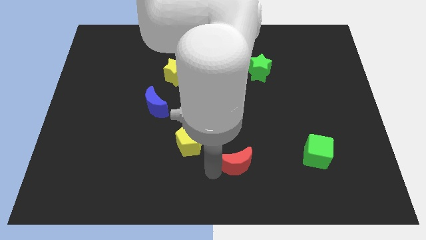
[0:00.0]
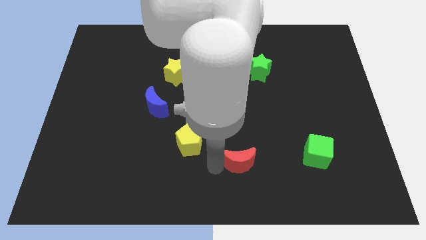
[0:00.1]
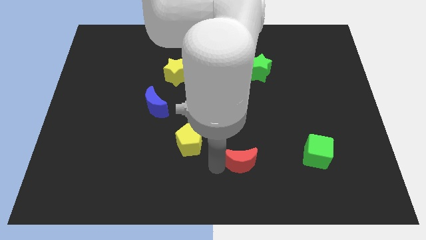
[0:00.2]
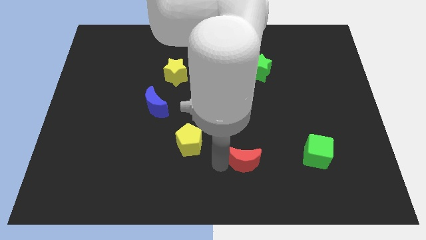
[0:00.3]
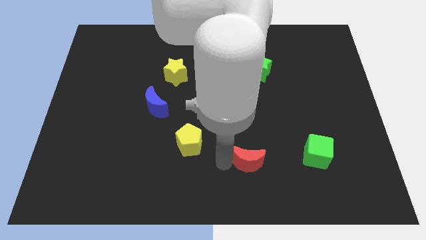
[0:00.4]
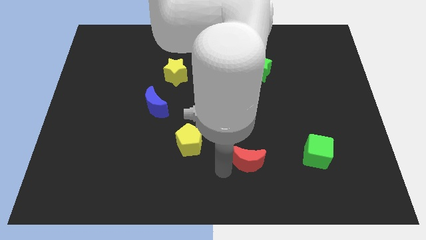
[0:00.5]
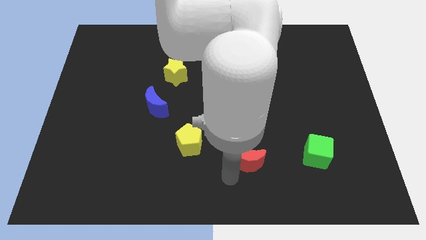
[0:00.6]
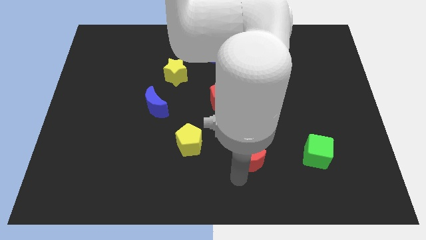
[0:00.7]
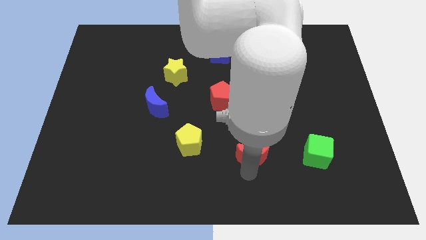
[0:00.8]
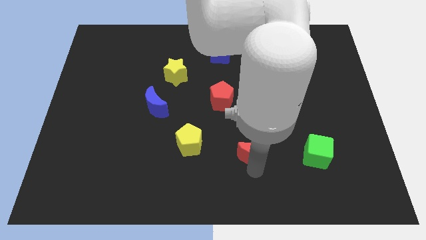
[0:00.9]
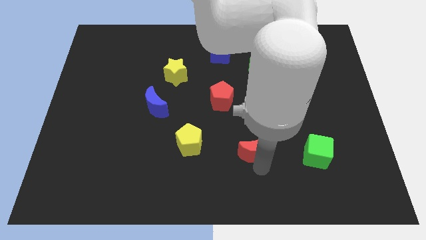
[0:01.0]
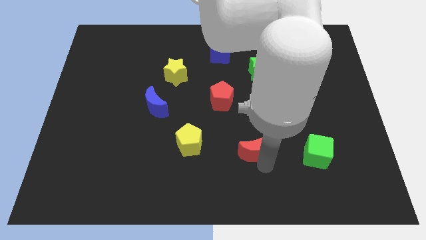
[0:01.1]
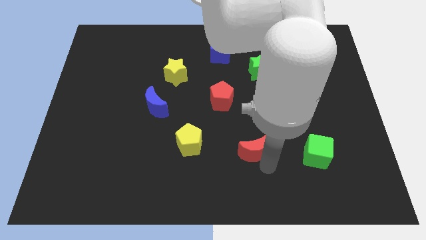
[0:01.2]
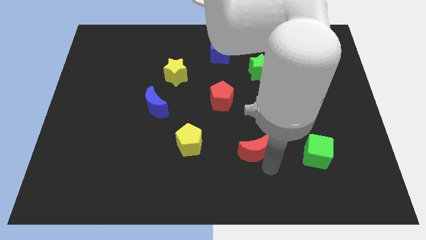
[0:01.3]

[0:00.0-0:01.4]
place red crescent to the left of green cube

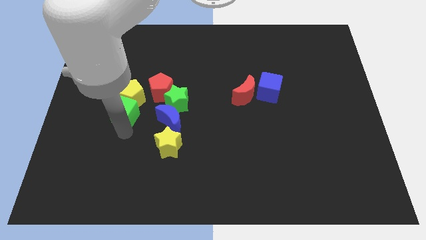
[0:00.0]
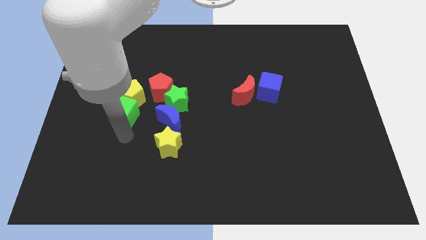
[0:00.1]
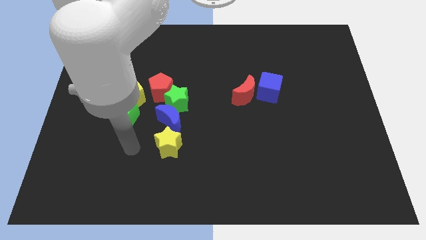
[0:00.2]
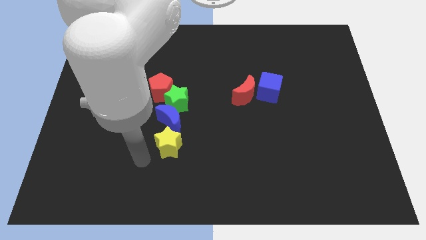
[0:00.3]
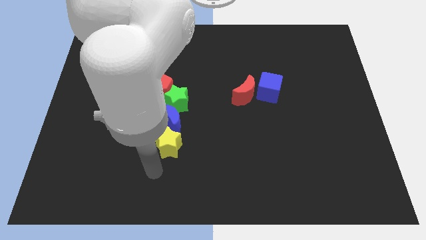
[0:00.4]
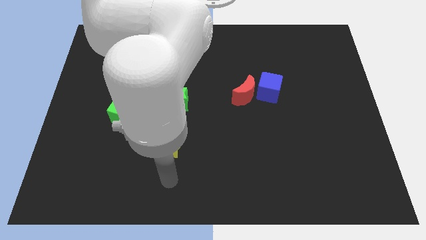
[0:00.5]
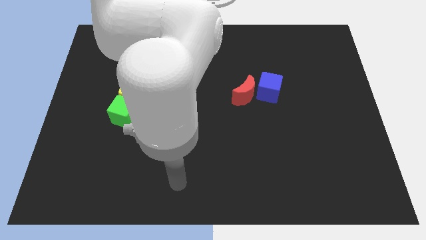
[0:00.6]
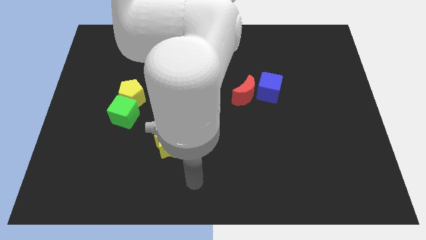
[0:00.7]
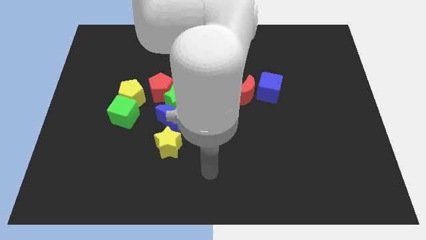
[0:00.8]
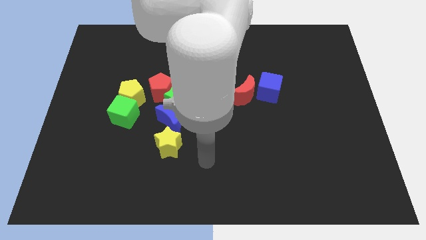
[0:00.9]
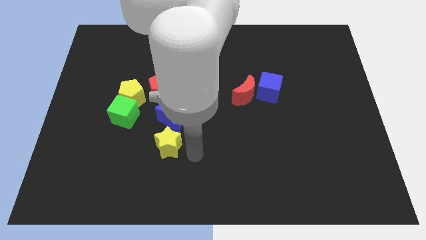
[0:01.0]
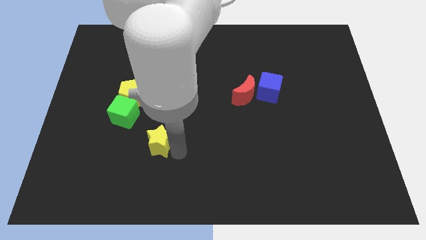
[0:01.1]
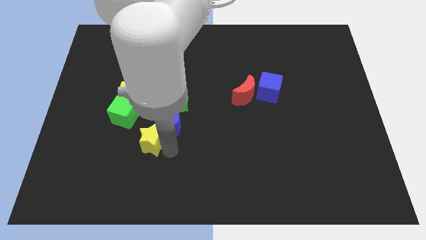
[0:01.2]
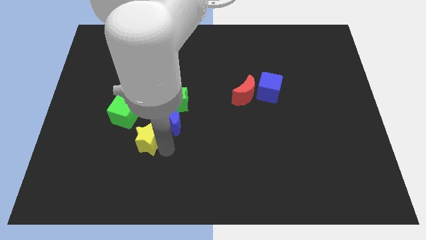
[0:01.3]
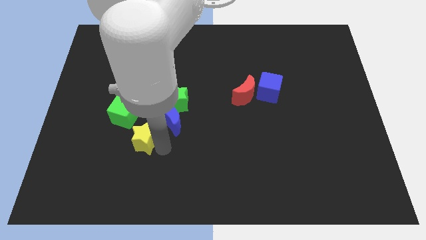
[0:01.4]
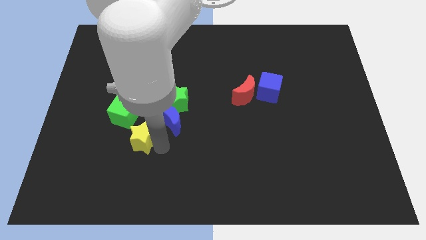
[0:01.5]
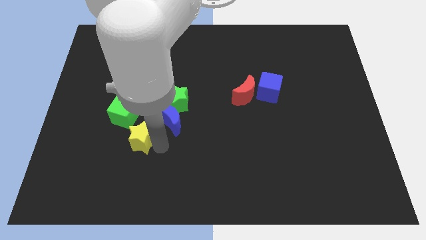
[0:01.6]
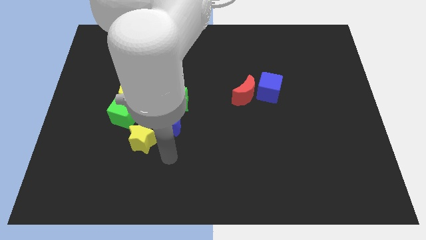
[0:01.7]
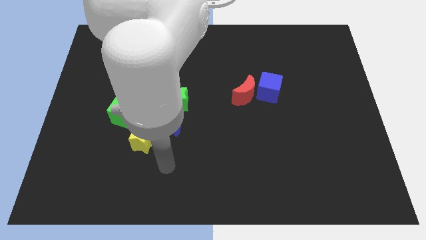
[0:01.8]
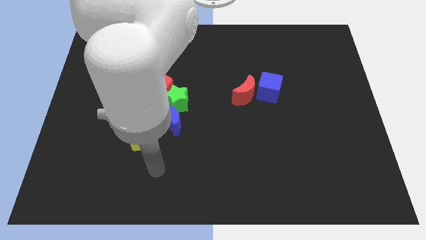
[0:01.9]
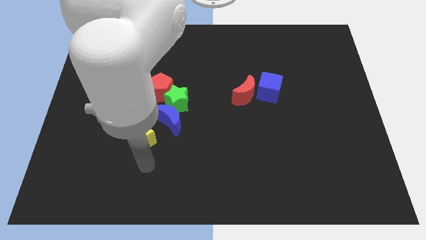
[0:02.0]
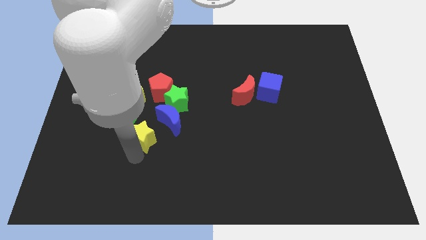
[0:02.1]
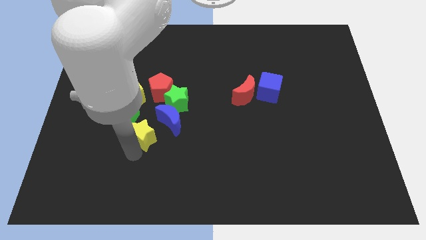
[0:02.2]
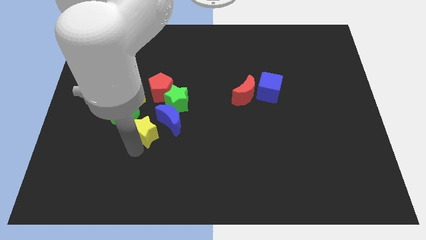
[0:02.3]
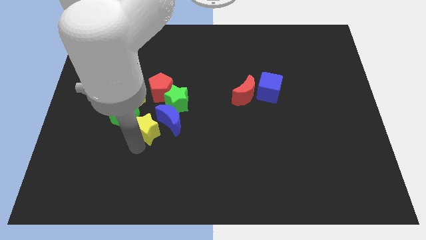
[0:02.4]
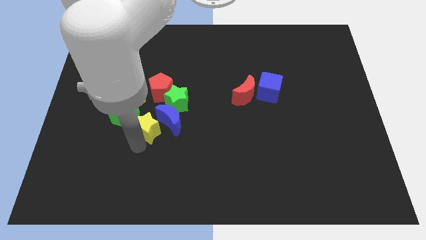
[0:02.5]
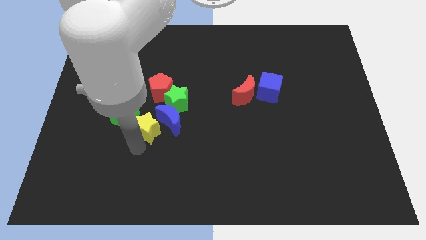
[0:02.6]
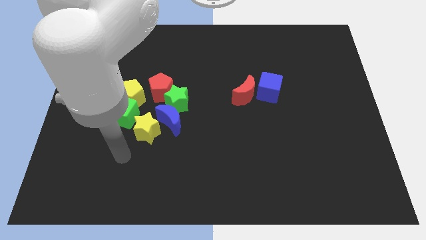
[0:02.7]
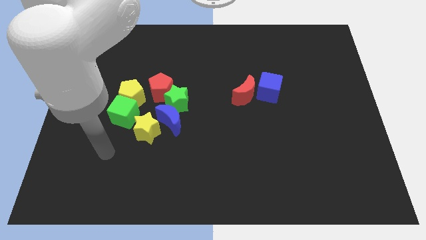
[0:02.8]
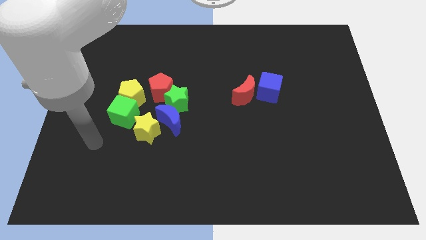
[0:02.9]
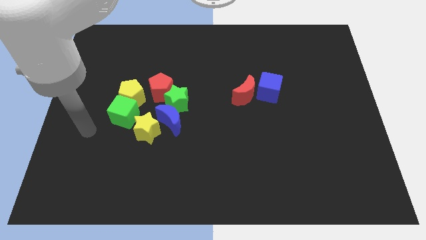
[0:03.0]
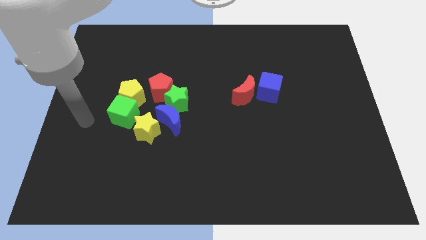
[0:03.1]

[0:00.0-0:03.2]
put the yellow star at the bottom left side of the blue crescent

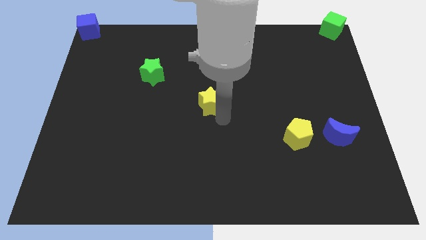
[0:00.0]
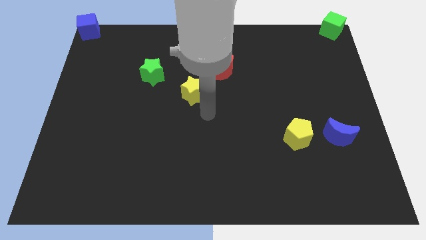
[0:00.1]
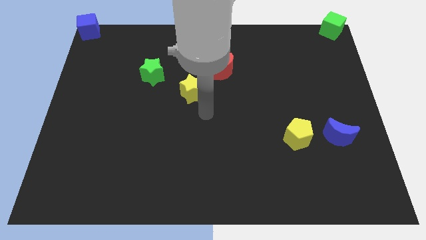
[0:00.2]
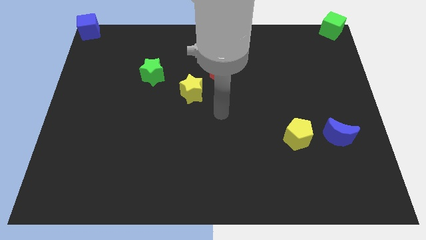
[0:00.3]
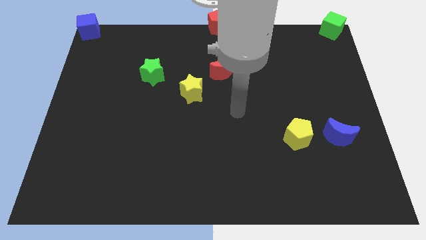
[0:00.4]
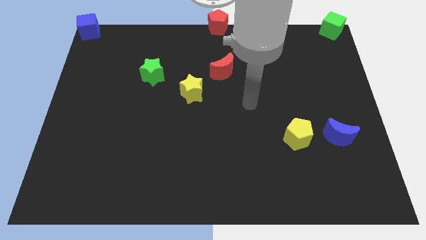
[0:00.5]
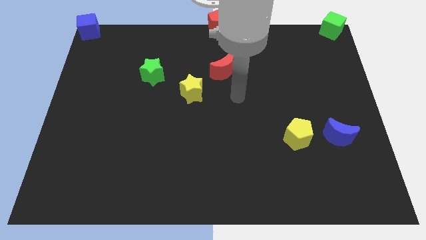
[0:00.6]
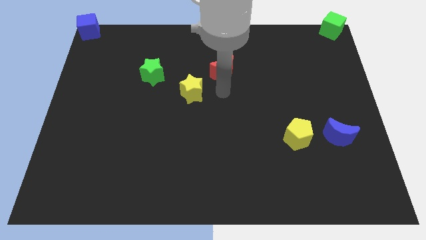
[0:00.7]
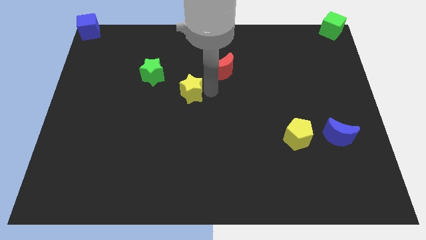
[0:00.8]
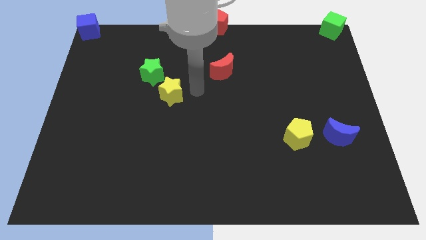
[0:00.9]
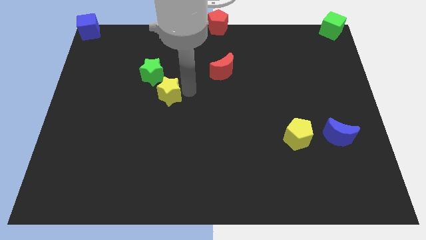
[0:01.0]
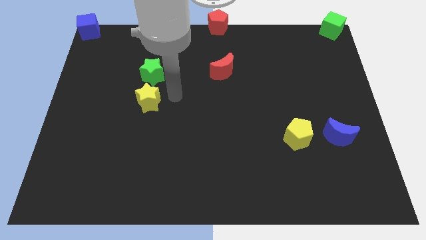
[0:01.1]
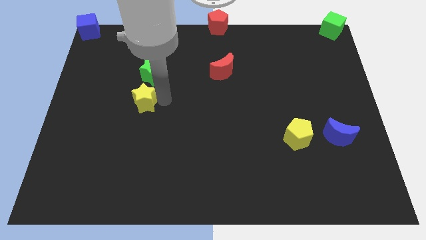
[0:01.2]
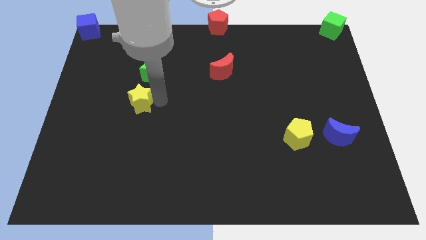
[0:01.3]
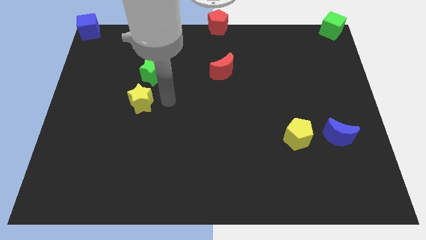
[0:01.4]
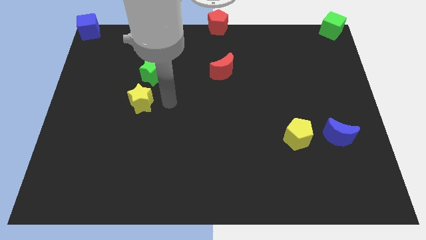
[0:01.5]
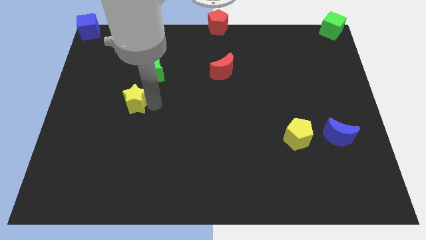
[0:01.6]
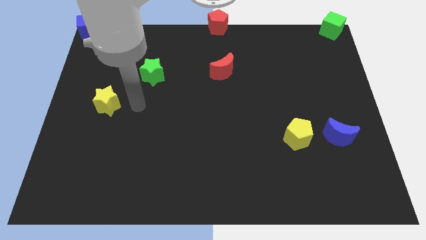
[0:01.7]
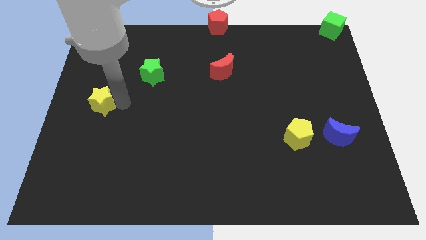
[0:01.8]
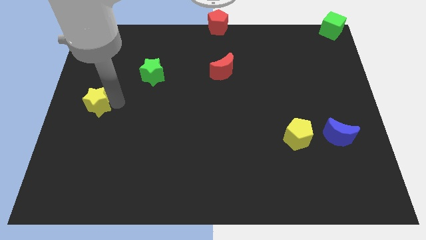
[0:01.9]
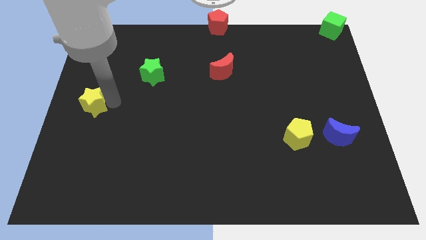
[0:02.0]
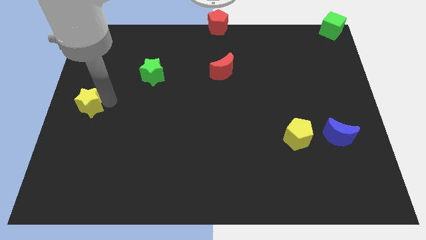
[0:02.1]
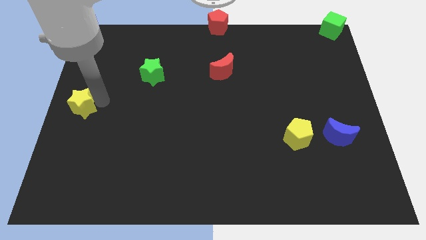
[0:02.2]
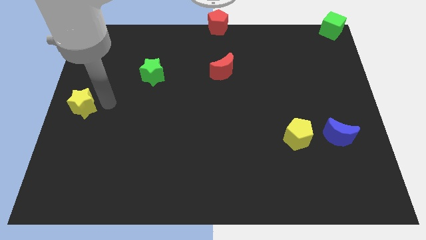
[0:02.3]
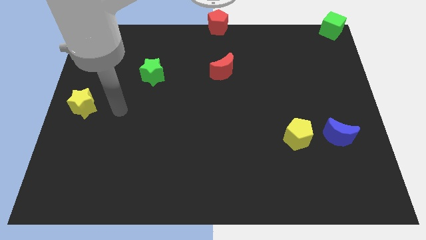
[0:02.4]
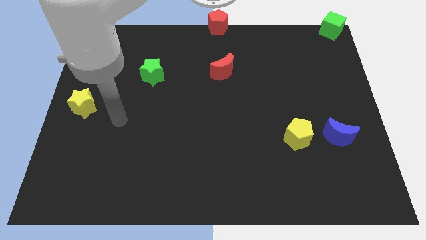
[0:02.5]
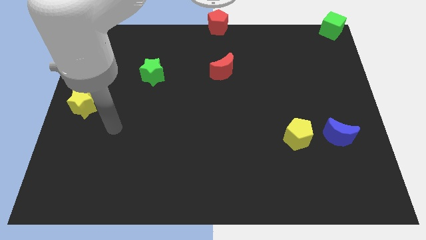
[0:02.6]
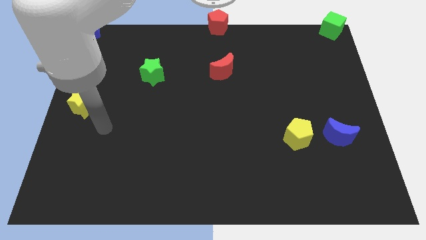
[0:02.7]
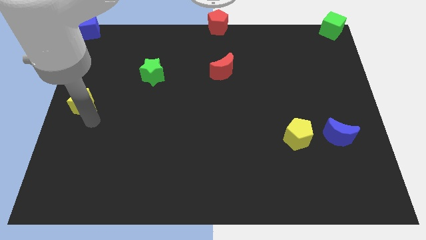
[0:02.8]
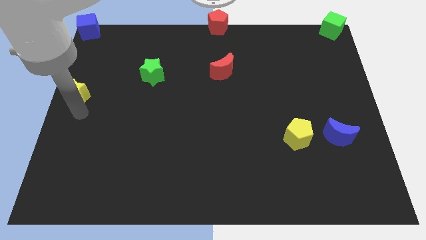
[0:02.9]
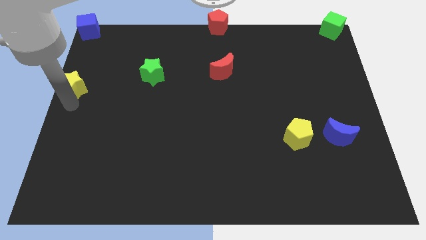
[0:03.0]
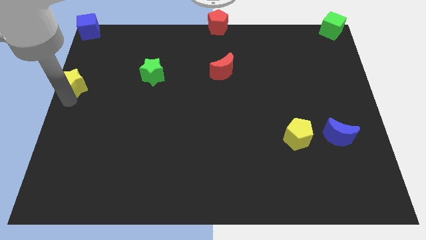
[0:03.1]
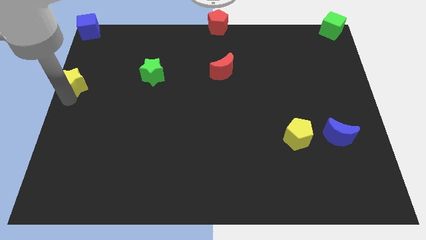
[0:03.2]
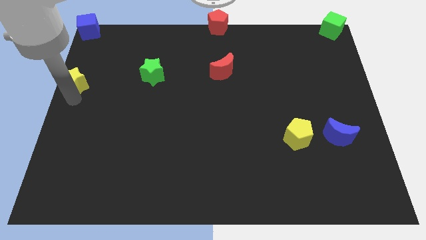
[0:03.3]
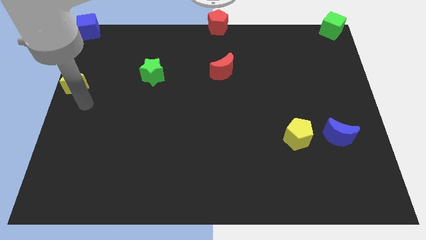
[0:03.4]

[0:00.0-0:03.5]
move the yellow star down to the blue cube

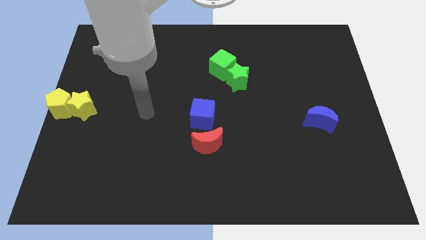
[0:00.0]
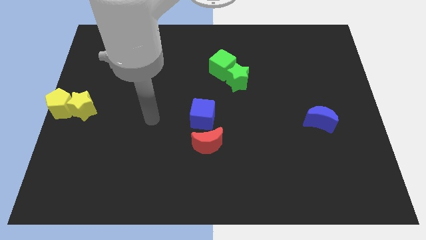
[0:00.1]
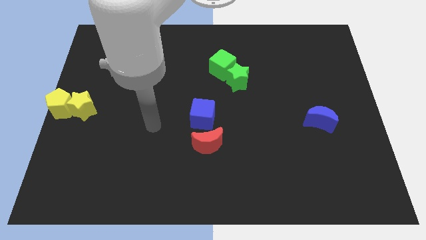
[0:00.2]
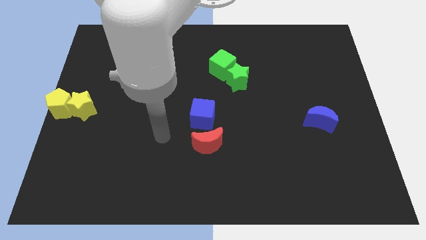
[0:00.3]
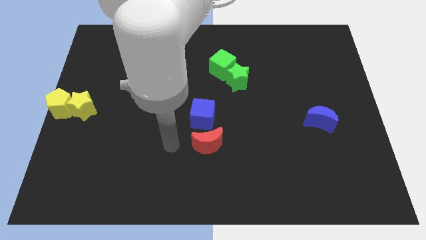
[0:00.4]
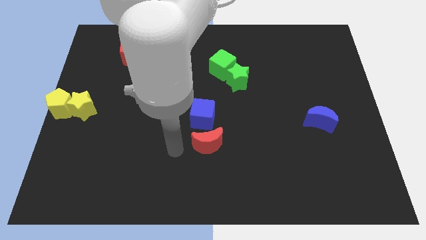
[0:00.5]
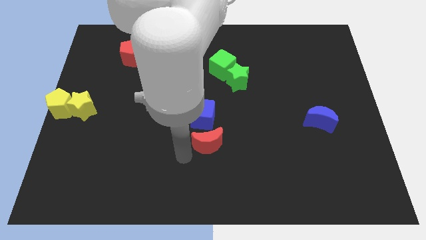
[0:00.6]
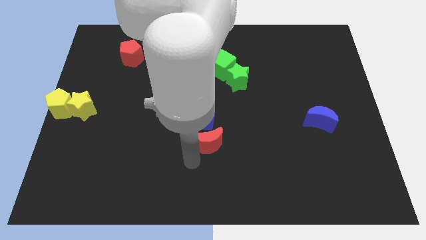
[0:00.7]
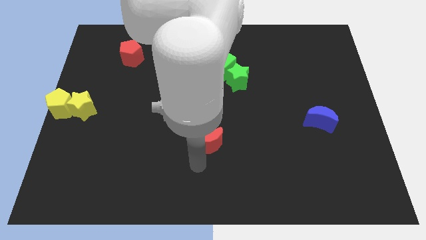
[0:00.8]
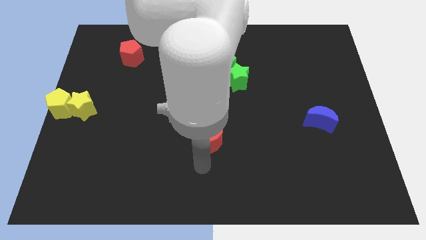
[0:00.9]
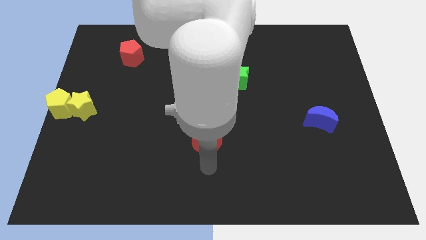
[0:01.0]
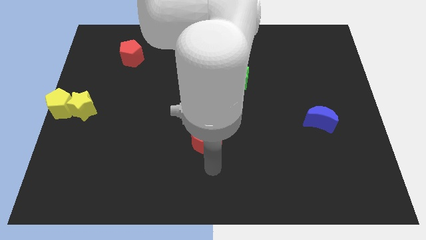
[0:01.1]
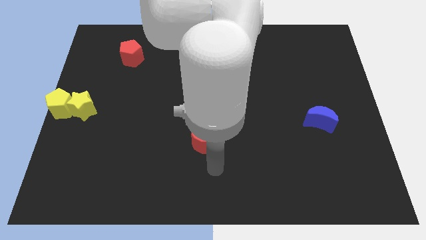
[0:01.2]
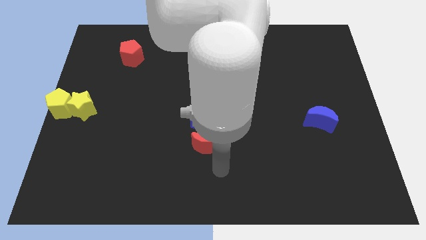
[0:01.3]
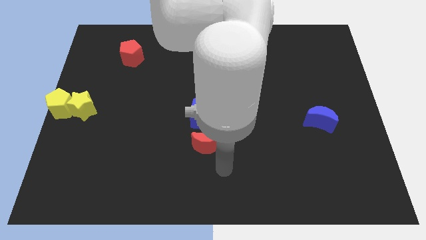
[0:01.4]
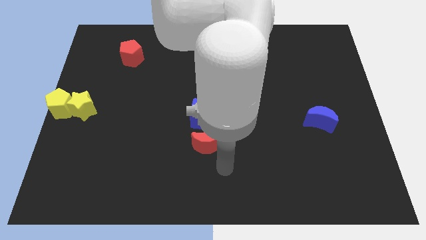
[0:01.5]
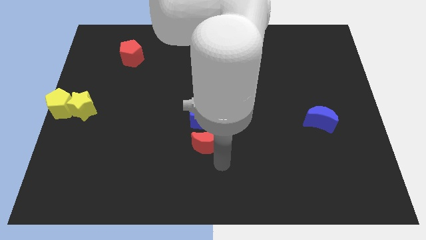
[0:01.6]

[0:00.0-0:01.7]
move your arm to the bottom of the red crescent
